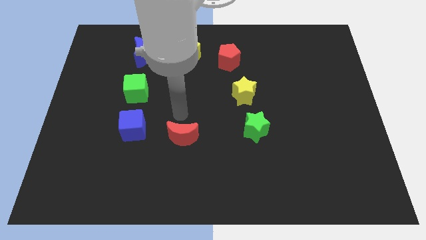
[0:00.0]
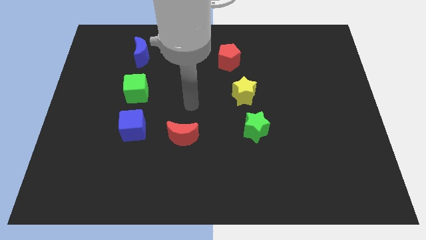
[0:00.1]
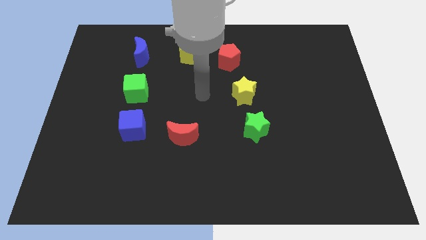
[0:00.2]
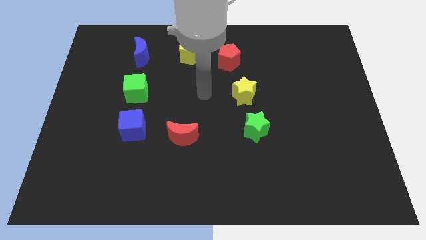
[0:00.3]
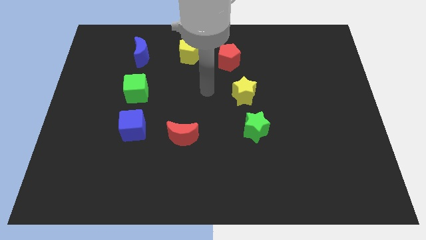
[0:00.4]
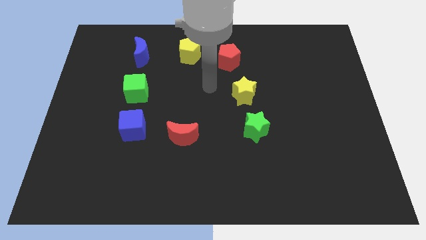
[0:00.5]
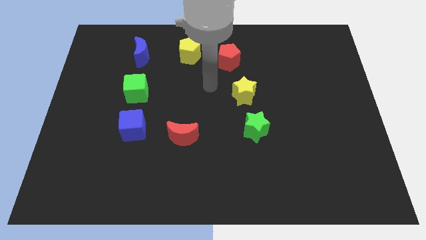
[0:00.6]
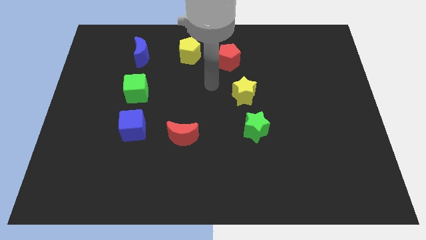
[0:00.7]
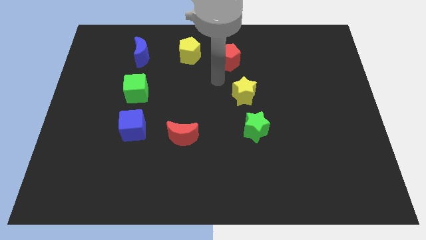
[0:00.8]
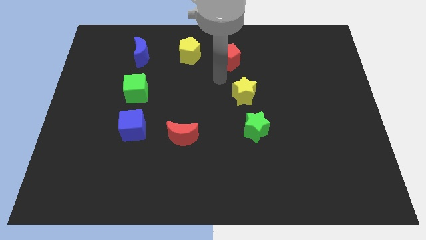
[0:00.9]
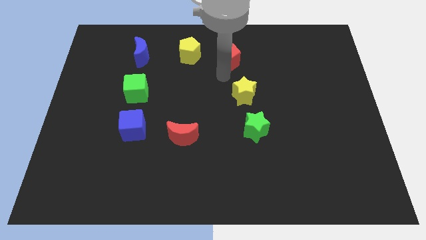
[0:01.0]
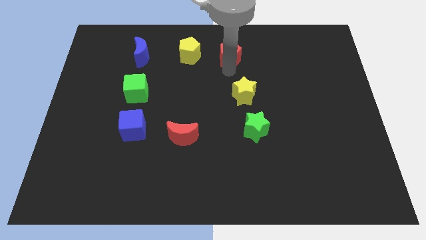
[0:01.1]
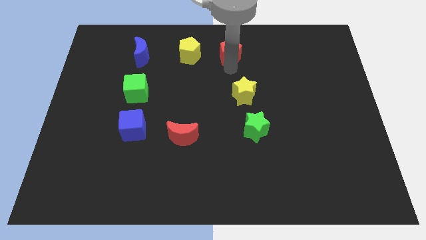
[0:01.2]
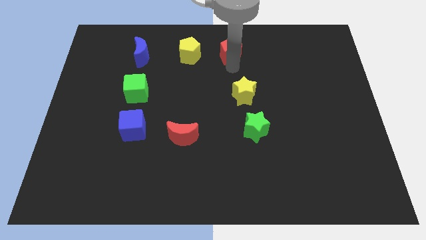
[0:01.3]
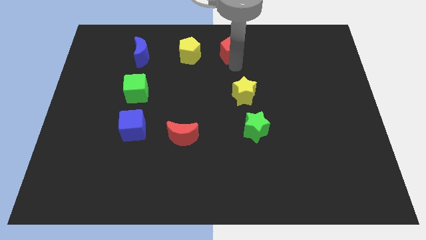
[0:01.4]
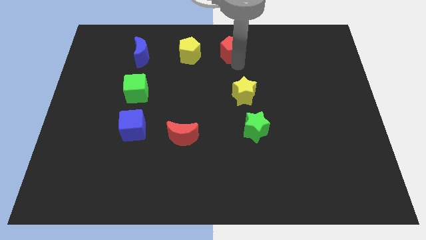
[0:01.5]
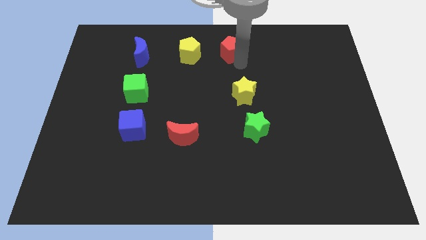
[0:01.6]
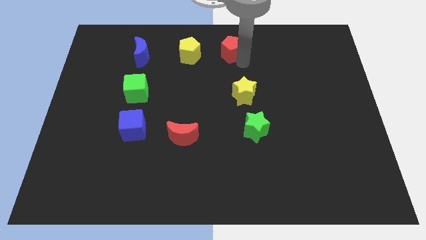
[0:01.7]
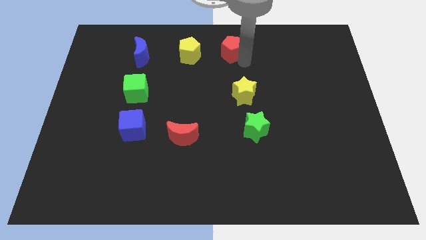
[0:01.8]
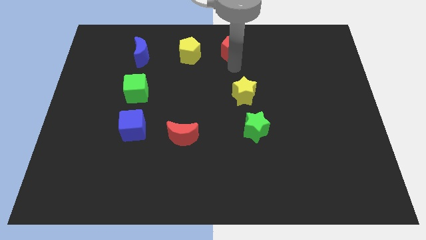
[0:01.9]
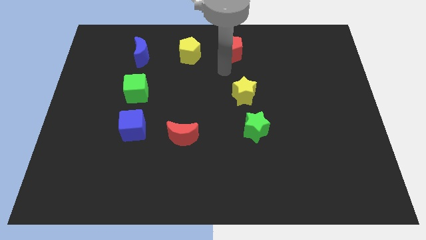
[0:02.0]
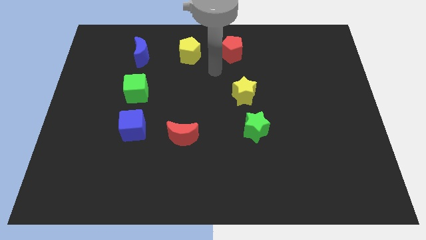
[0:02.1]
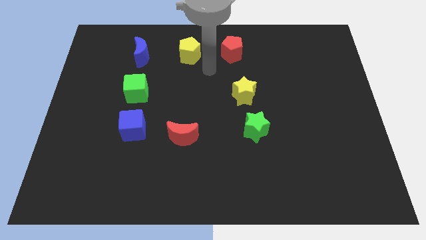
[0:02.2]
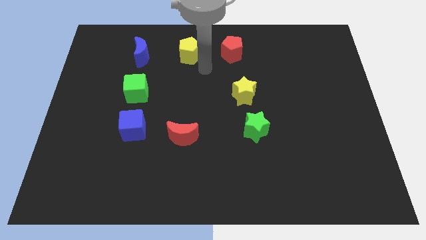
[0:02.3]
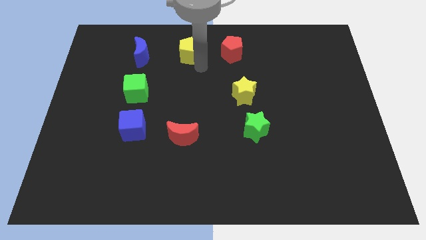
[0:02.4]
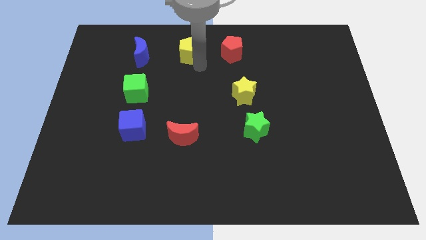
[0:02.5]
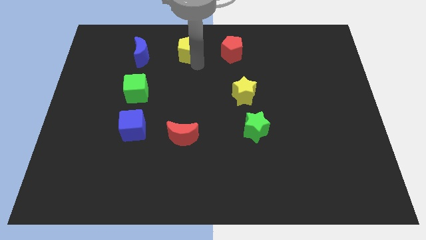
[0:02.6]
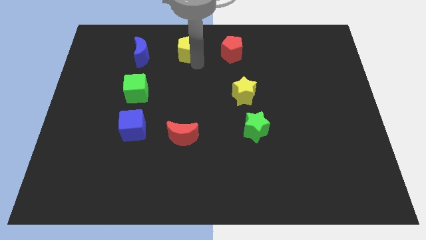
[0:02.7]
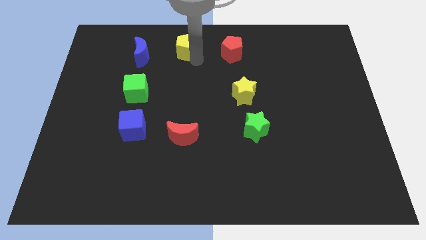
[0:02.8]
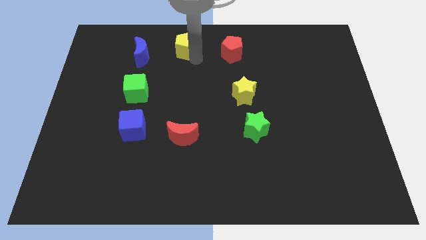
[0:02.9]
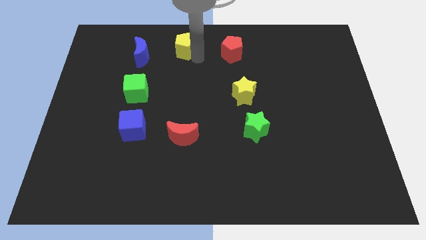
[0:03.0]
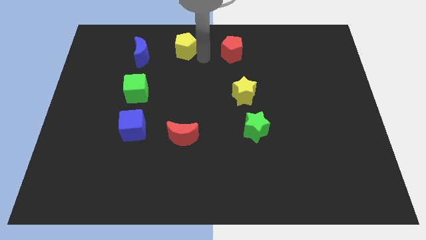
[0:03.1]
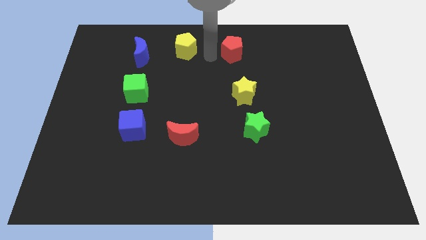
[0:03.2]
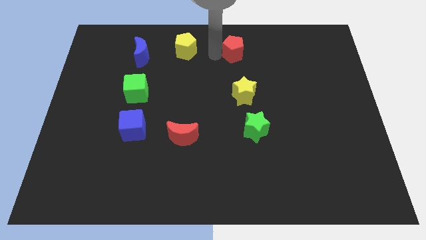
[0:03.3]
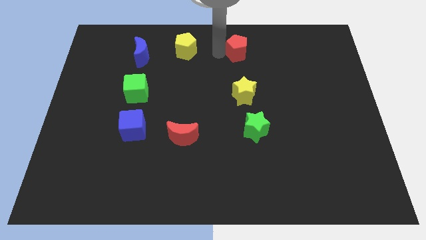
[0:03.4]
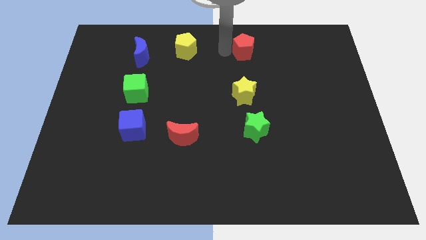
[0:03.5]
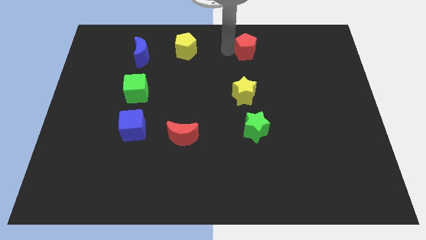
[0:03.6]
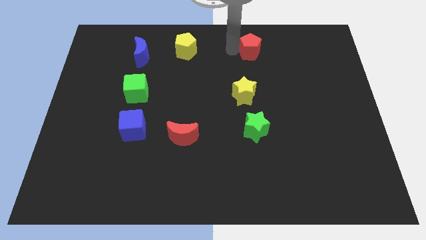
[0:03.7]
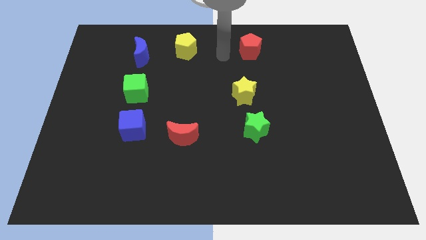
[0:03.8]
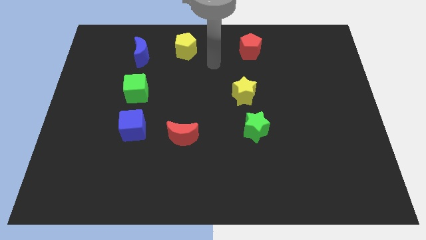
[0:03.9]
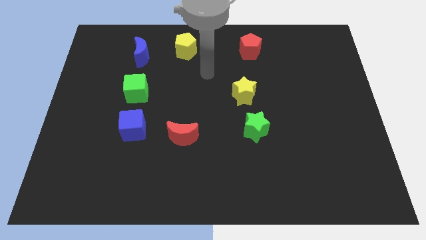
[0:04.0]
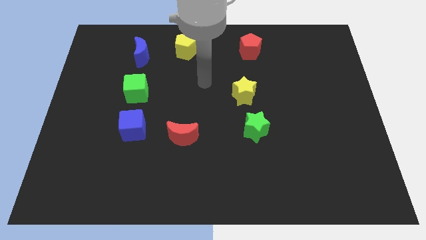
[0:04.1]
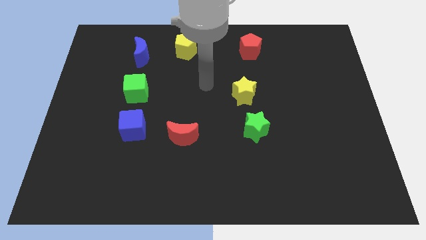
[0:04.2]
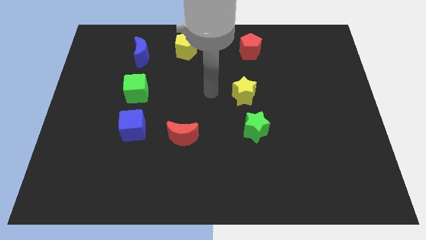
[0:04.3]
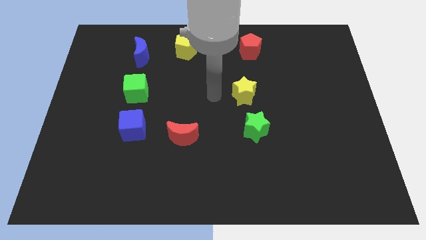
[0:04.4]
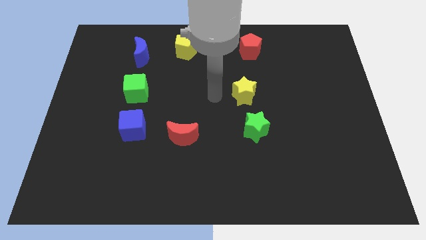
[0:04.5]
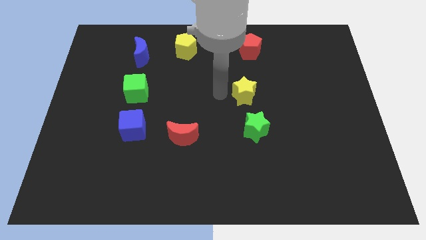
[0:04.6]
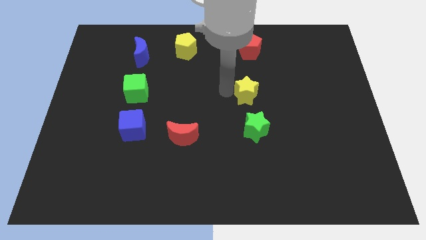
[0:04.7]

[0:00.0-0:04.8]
move the red pentagon towards the top right of the board

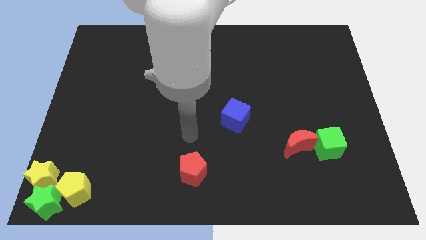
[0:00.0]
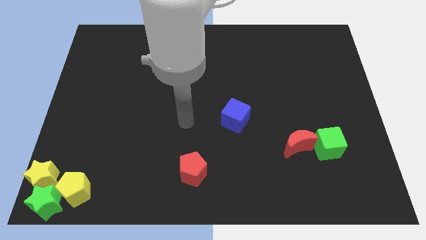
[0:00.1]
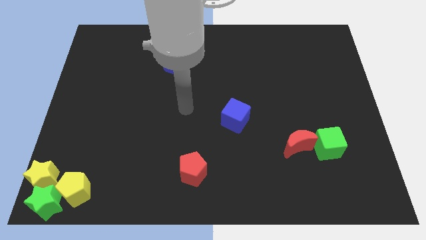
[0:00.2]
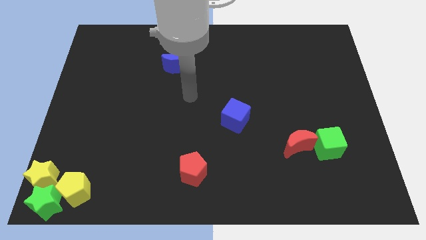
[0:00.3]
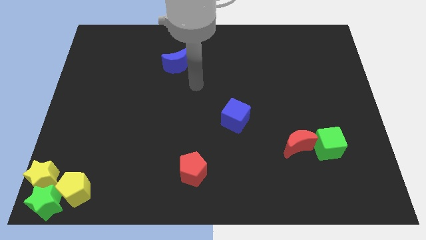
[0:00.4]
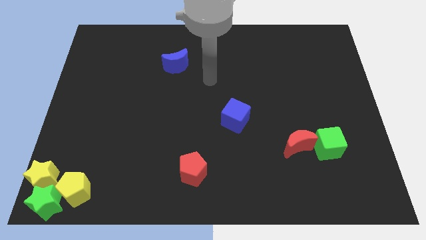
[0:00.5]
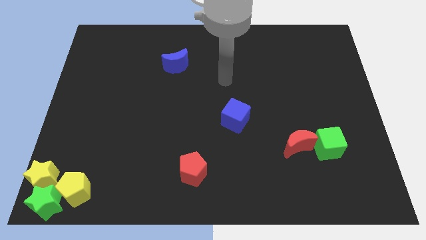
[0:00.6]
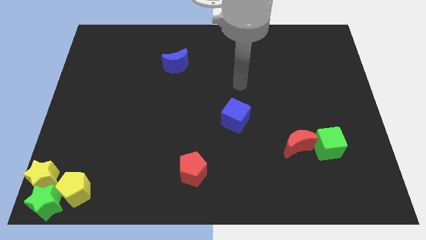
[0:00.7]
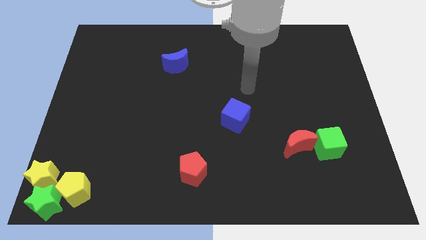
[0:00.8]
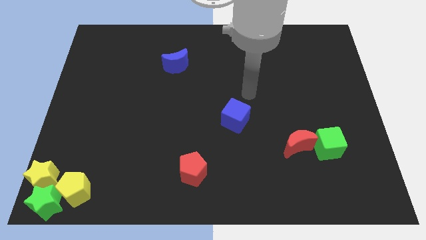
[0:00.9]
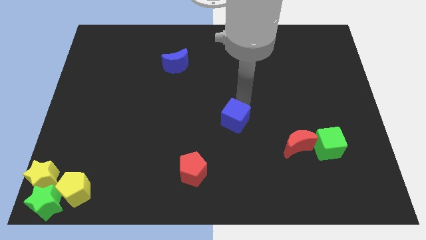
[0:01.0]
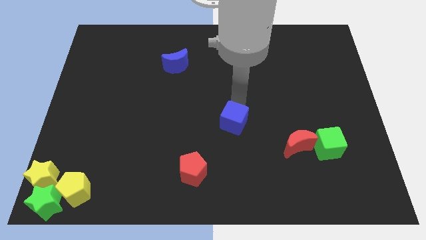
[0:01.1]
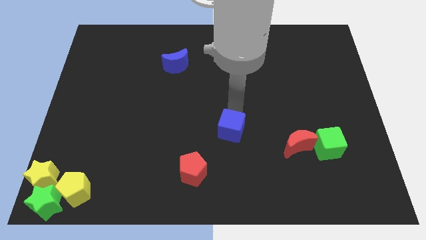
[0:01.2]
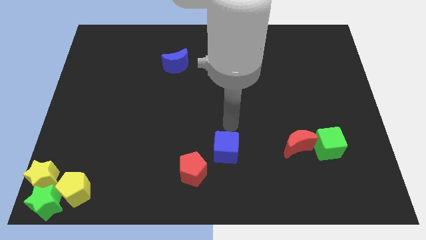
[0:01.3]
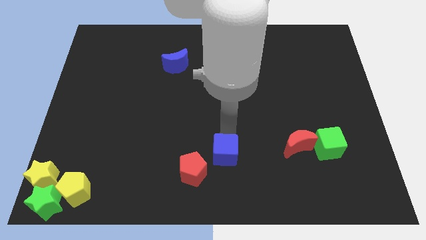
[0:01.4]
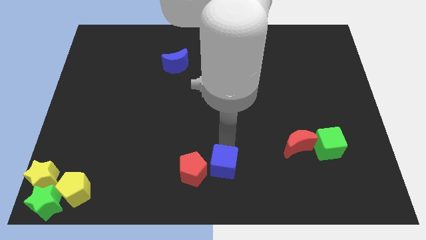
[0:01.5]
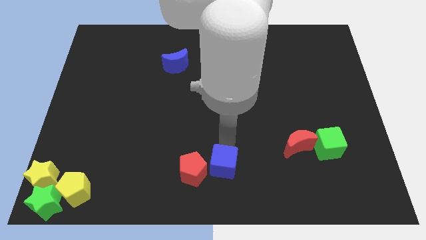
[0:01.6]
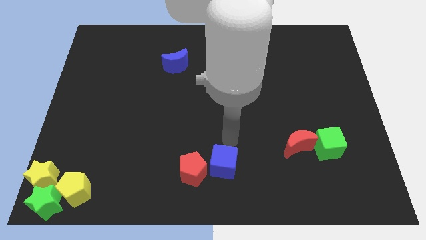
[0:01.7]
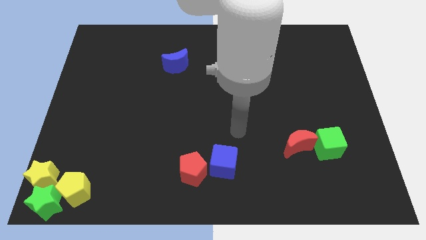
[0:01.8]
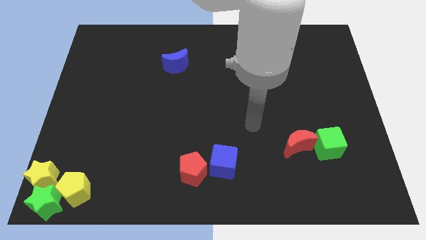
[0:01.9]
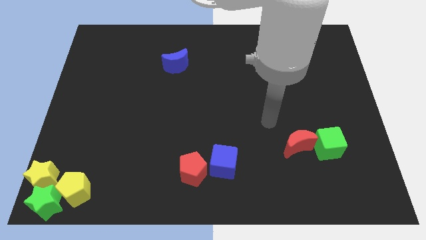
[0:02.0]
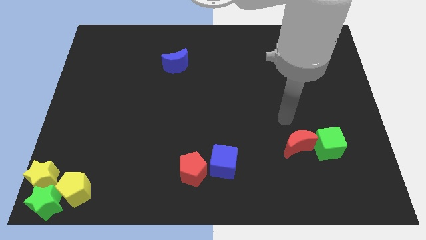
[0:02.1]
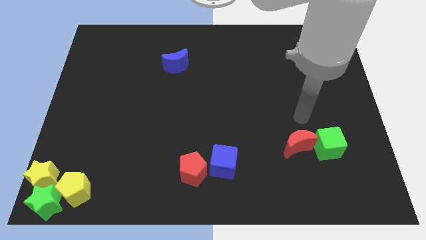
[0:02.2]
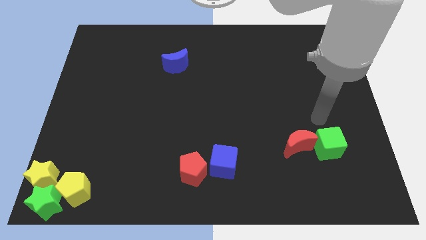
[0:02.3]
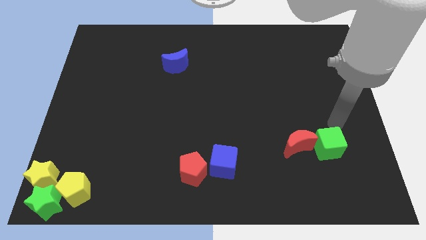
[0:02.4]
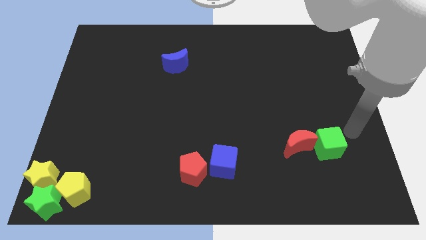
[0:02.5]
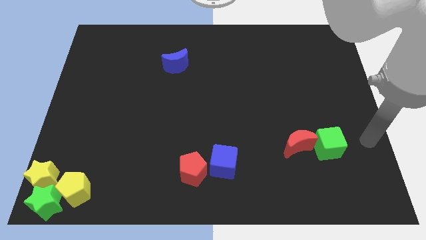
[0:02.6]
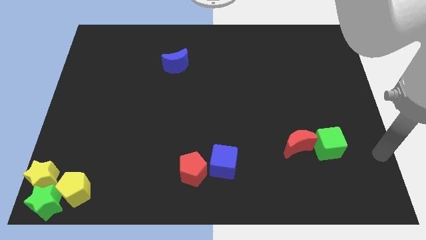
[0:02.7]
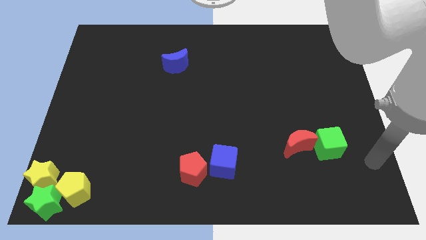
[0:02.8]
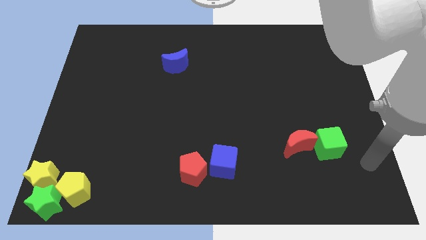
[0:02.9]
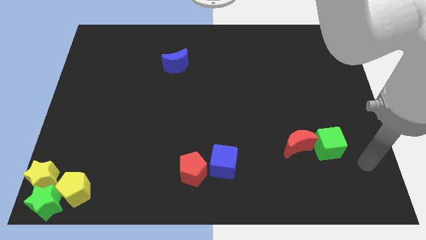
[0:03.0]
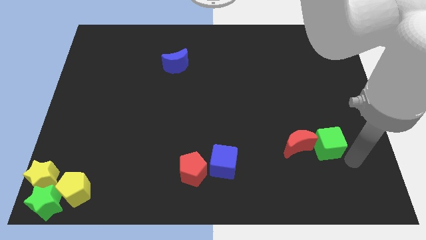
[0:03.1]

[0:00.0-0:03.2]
place blue cube to the right of red pentagon

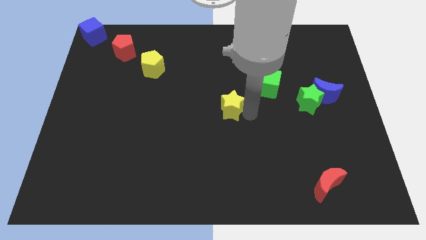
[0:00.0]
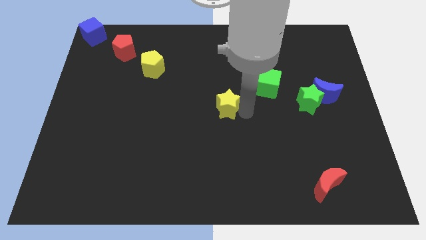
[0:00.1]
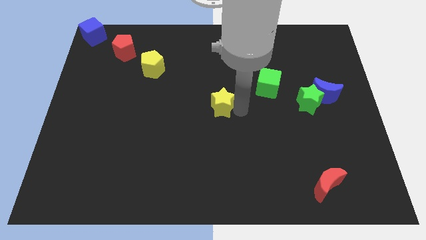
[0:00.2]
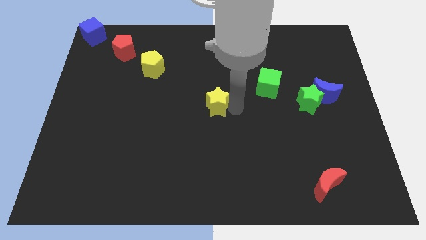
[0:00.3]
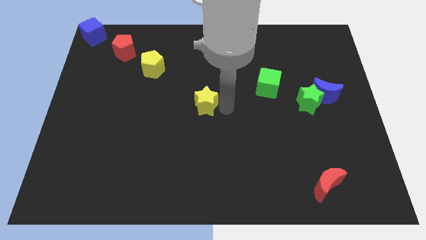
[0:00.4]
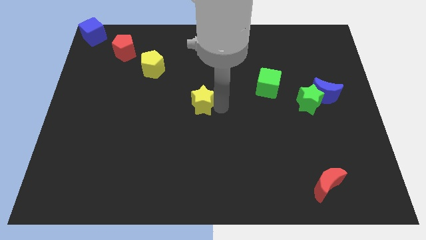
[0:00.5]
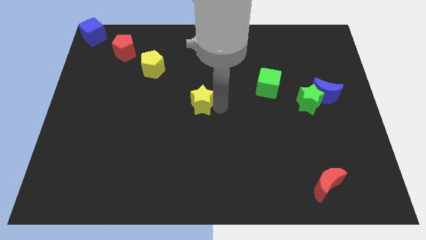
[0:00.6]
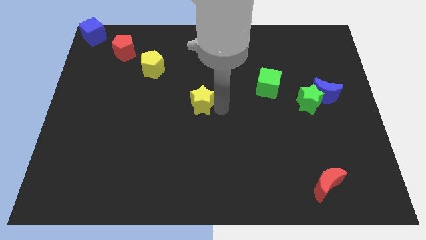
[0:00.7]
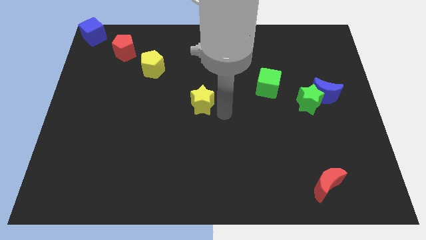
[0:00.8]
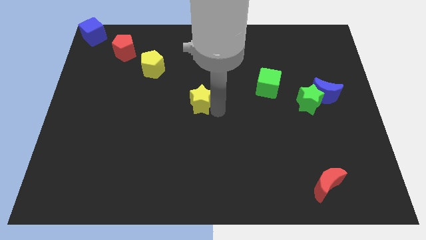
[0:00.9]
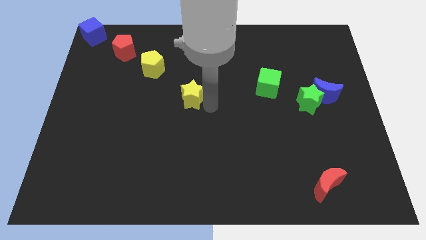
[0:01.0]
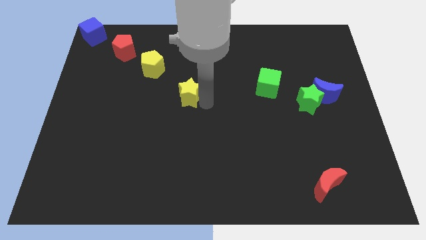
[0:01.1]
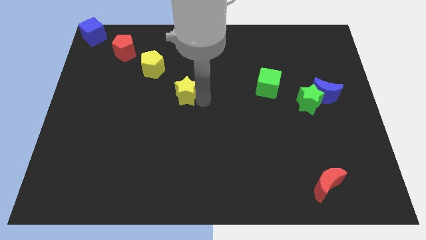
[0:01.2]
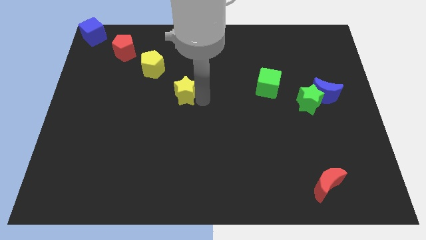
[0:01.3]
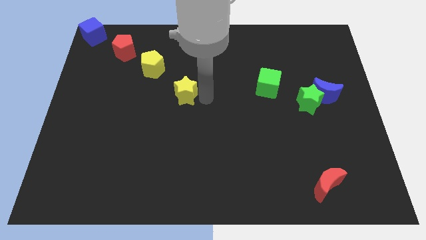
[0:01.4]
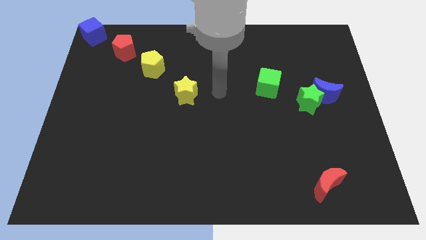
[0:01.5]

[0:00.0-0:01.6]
move the yellow star towards middle of the board
